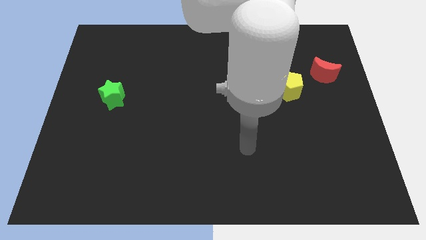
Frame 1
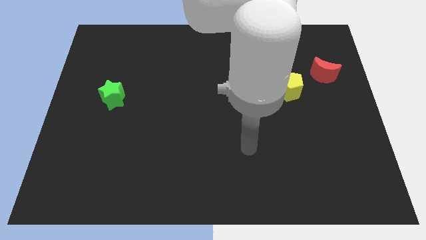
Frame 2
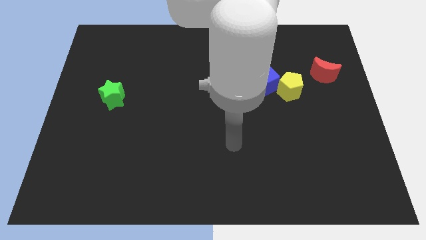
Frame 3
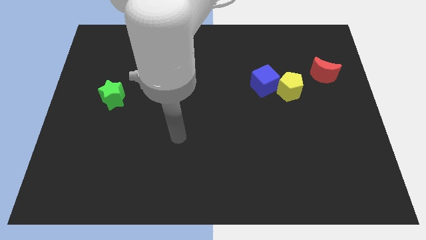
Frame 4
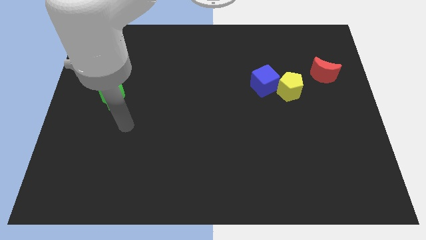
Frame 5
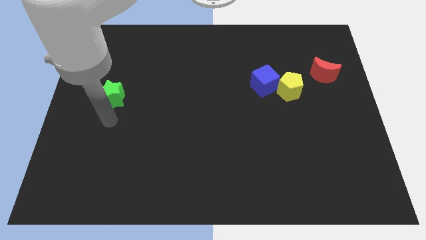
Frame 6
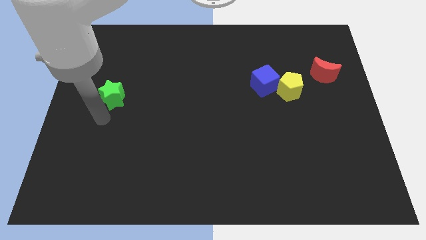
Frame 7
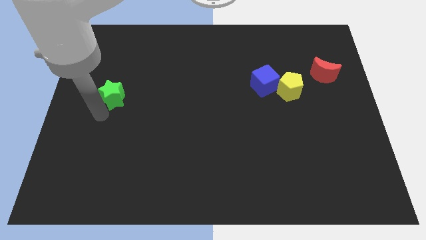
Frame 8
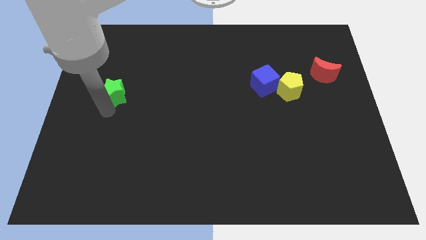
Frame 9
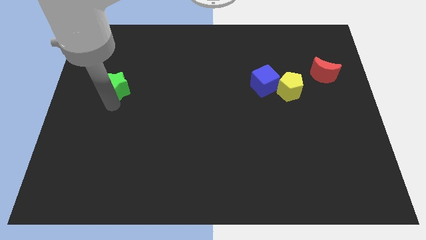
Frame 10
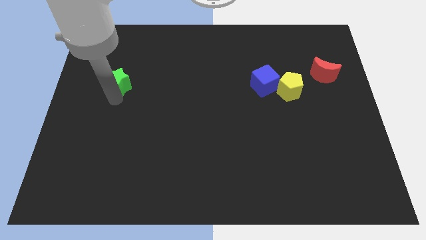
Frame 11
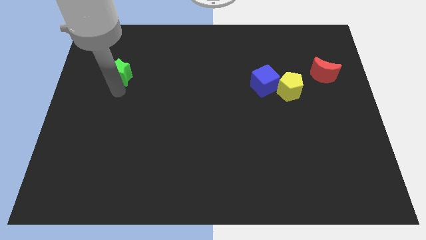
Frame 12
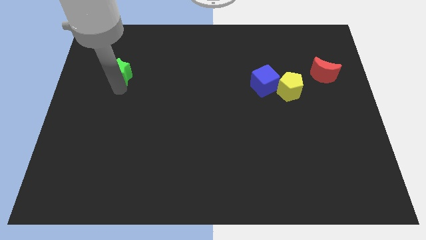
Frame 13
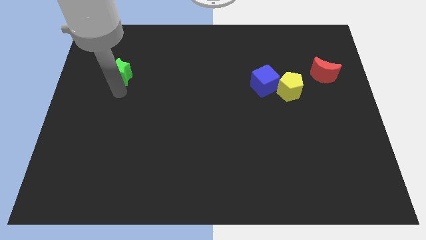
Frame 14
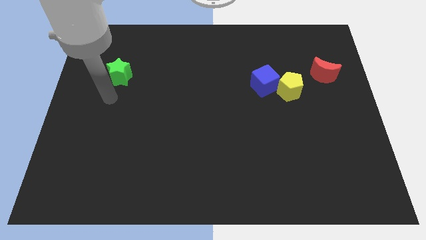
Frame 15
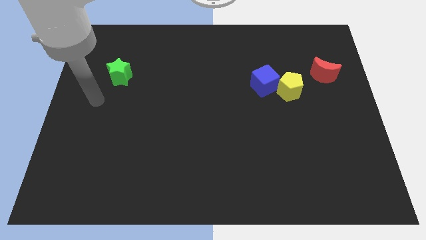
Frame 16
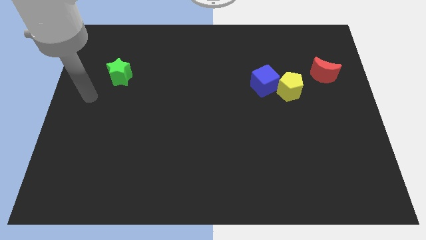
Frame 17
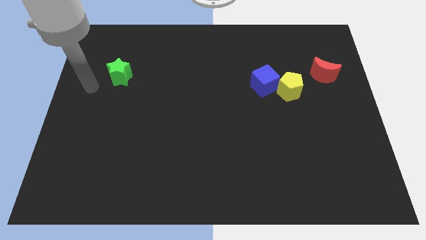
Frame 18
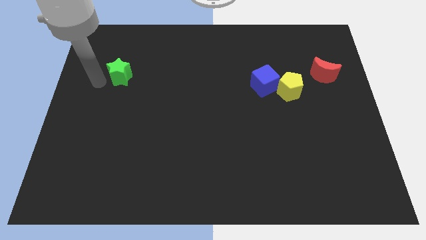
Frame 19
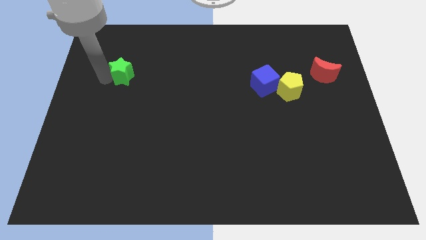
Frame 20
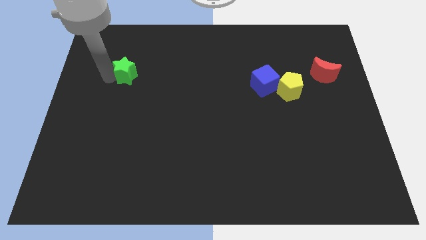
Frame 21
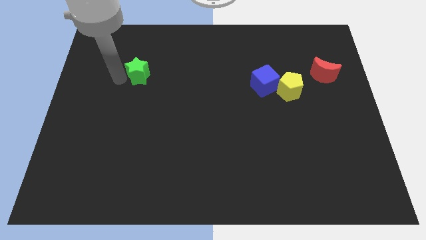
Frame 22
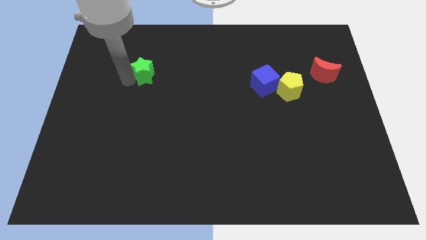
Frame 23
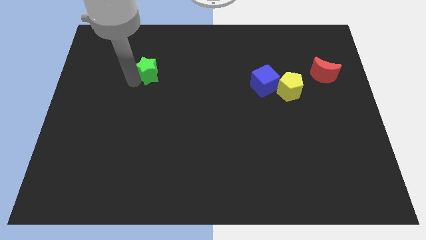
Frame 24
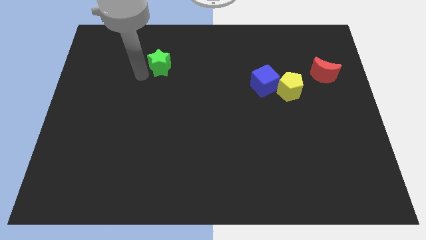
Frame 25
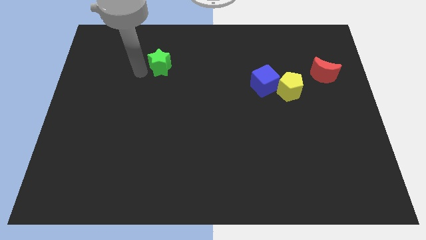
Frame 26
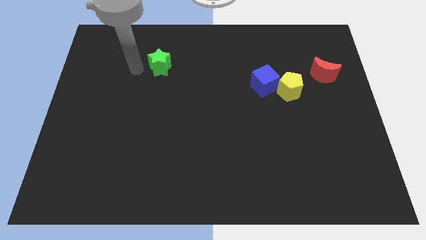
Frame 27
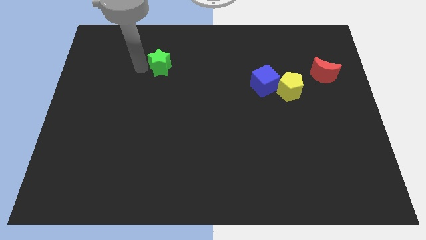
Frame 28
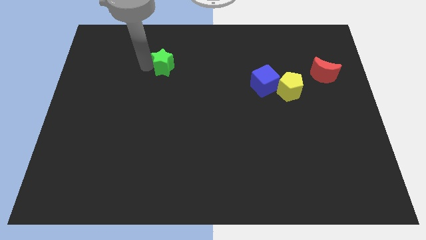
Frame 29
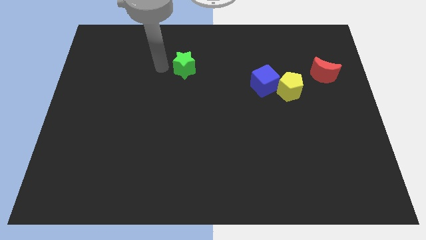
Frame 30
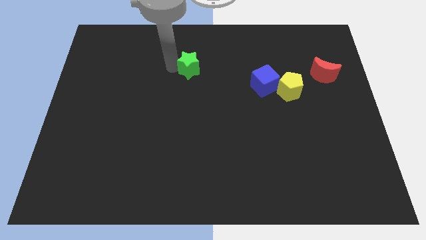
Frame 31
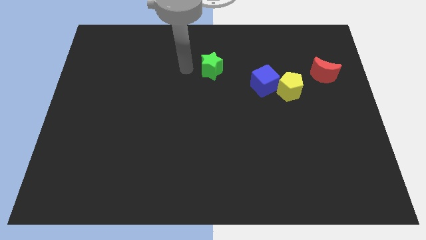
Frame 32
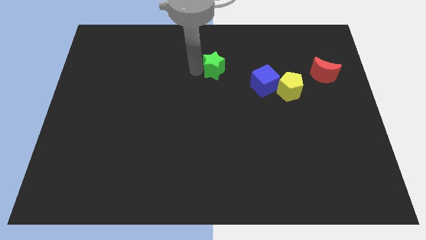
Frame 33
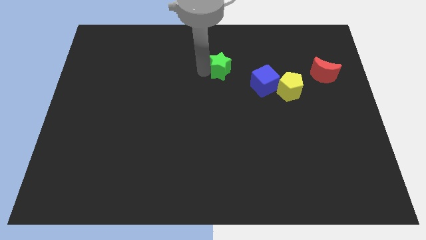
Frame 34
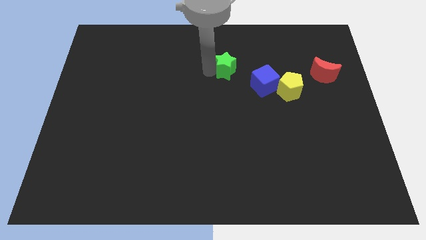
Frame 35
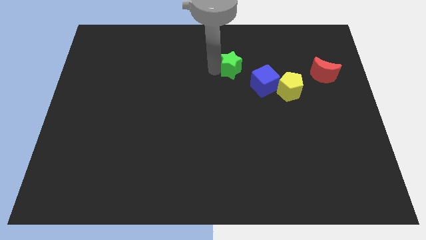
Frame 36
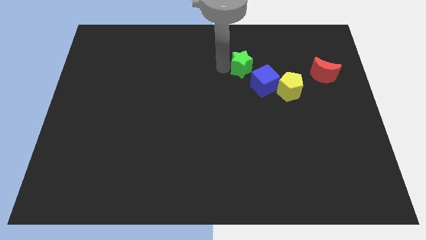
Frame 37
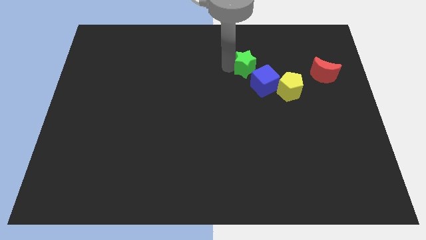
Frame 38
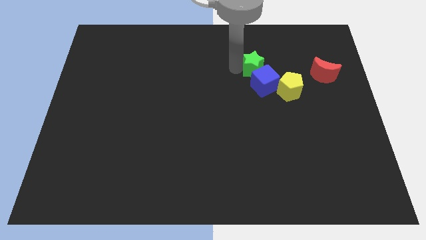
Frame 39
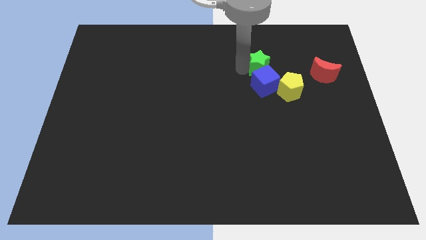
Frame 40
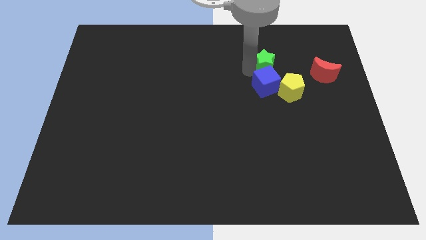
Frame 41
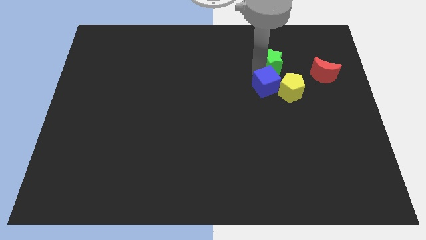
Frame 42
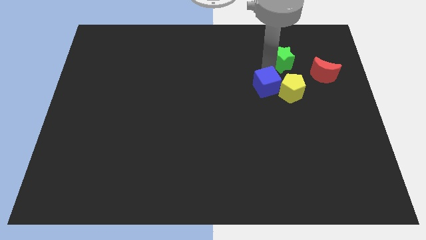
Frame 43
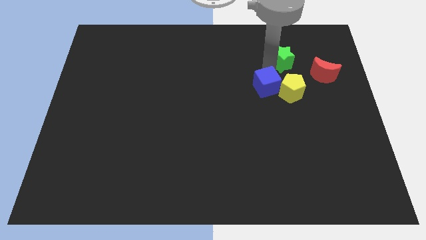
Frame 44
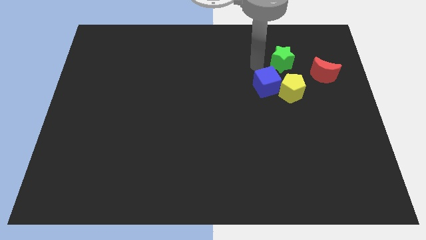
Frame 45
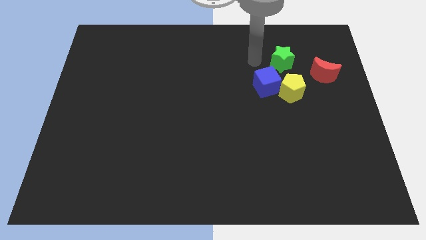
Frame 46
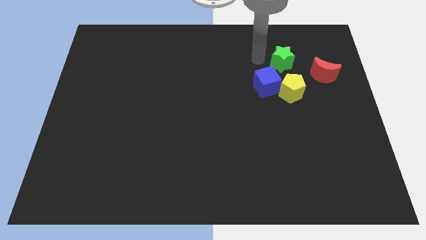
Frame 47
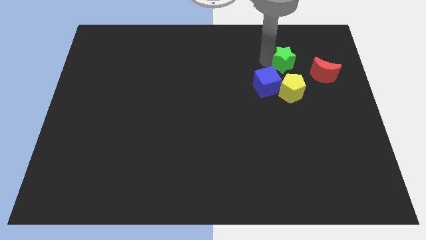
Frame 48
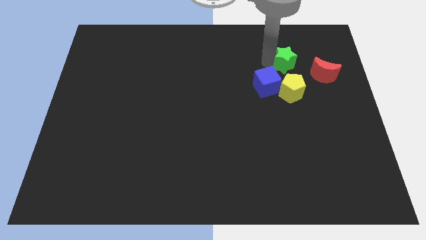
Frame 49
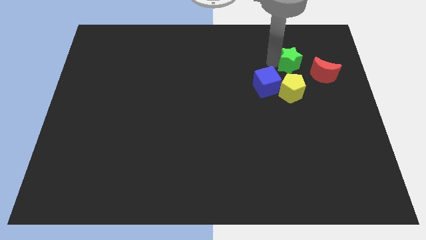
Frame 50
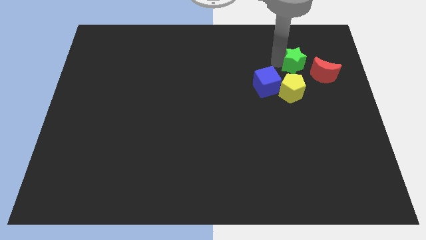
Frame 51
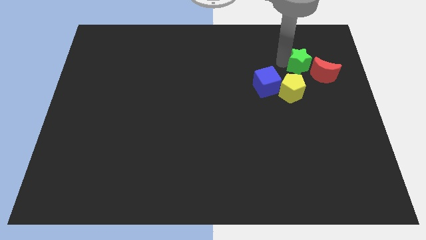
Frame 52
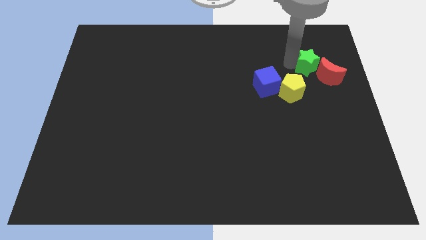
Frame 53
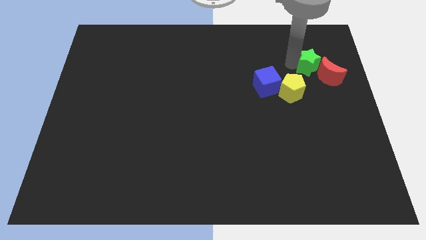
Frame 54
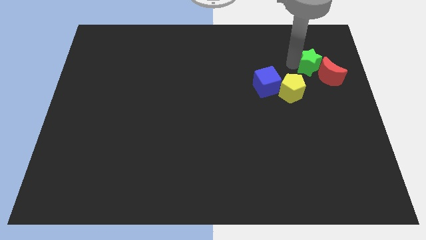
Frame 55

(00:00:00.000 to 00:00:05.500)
move the star close to the moon

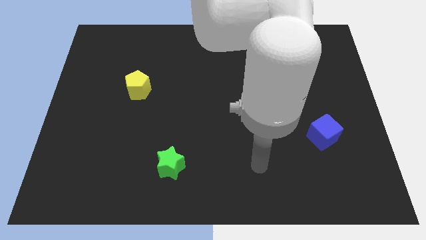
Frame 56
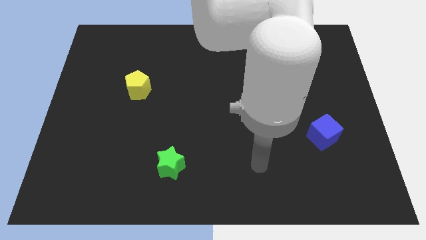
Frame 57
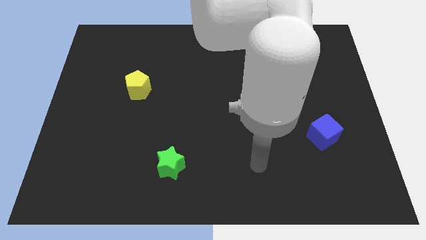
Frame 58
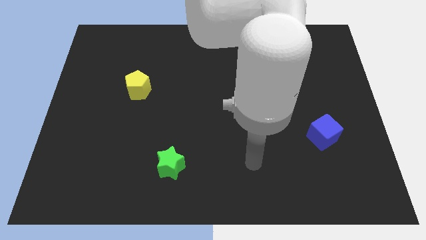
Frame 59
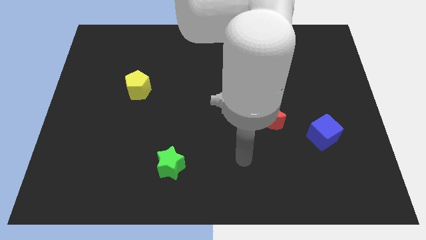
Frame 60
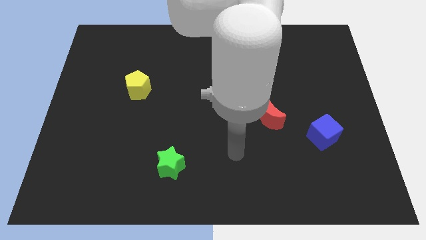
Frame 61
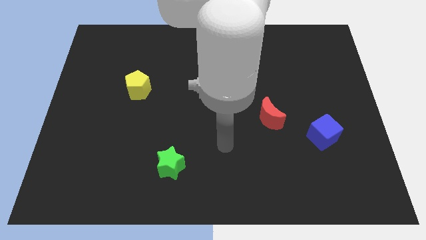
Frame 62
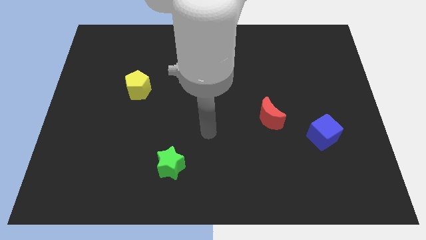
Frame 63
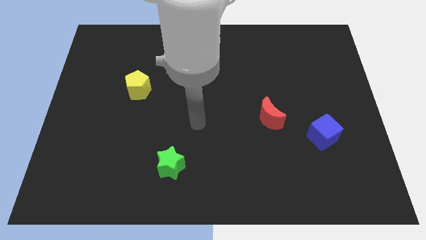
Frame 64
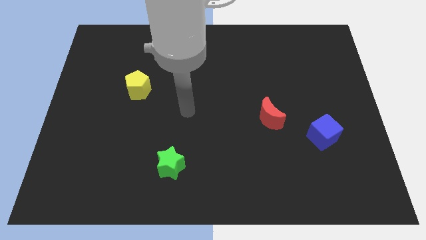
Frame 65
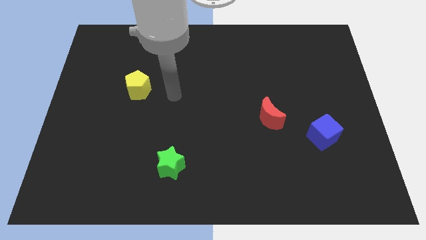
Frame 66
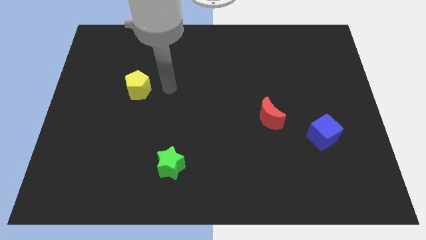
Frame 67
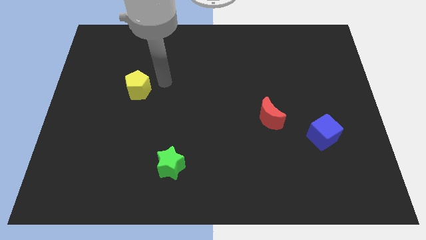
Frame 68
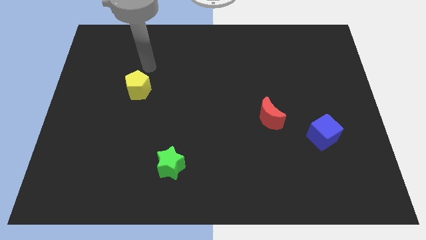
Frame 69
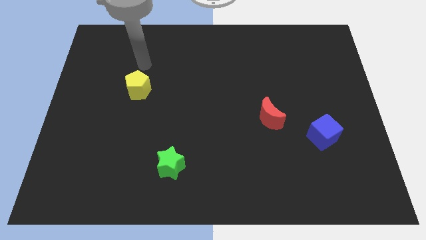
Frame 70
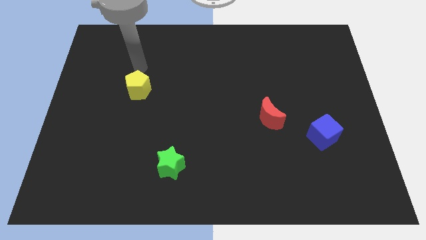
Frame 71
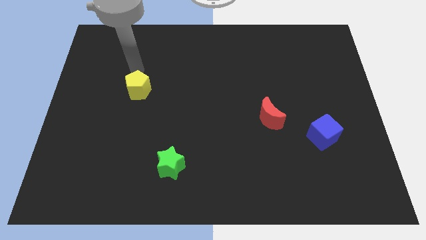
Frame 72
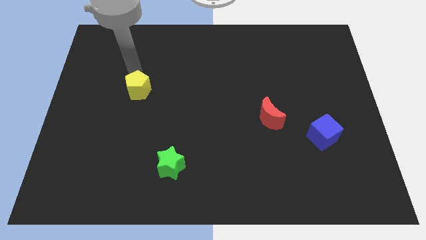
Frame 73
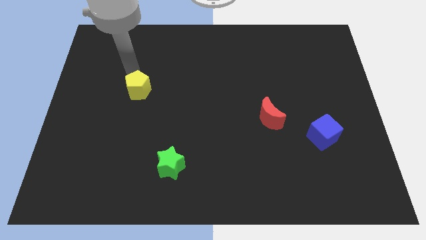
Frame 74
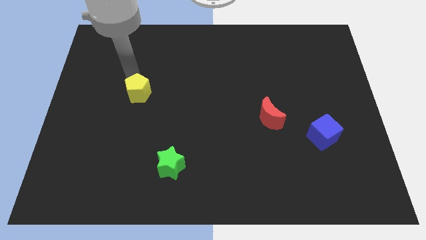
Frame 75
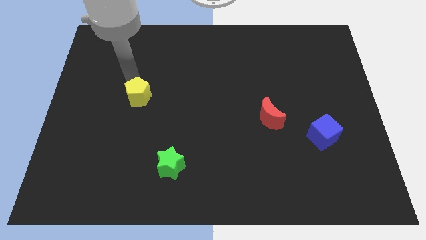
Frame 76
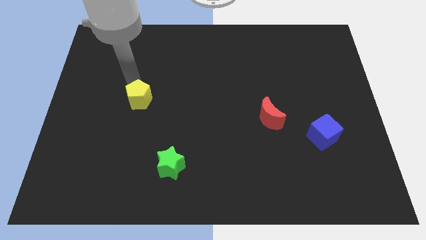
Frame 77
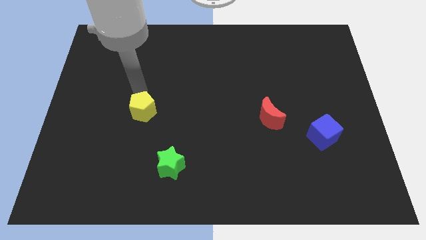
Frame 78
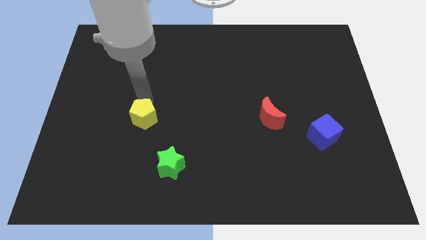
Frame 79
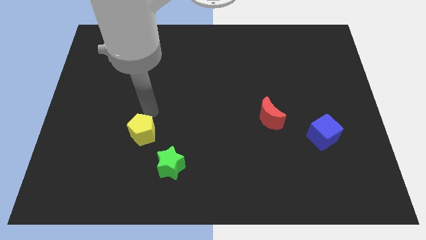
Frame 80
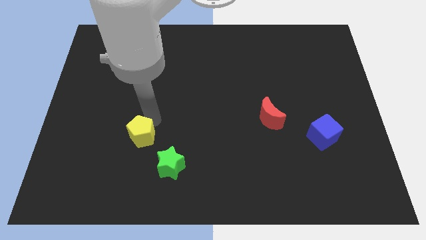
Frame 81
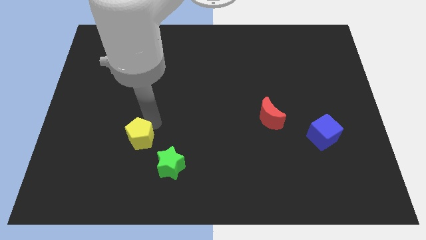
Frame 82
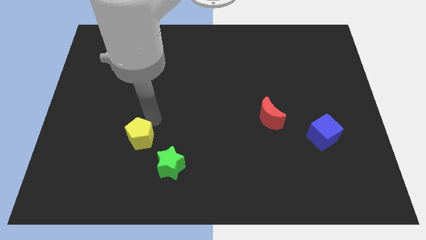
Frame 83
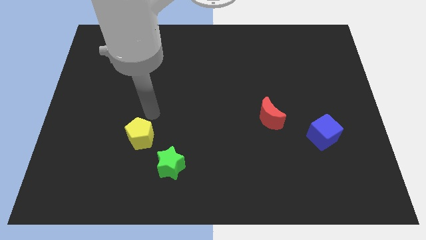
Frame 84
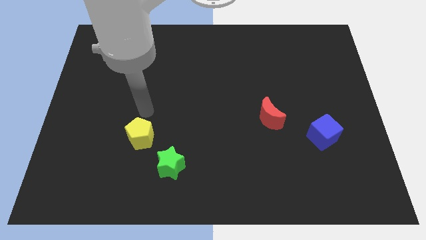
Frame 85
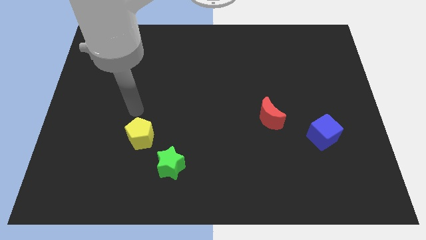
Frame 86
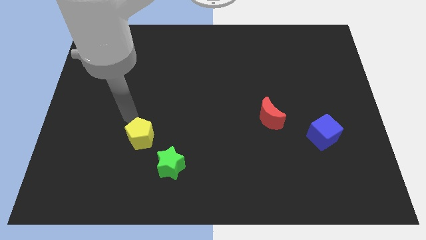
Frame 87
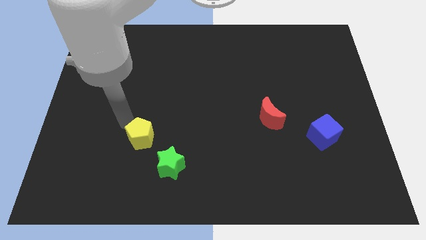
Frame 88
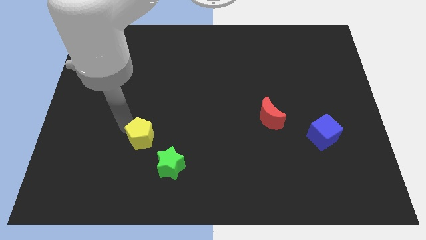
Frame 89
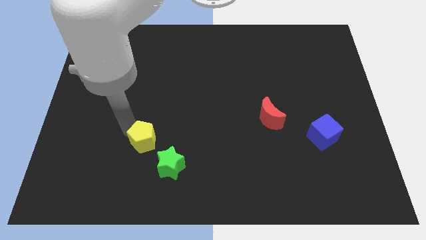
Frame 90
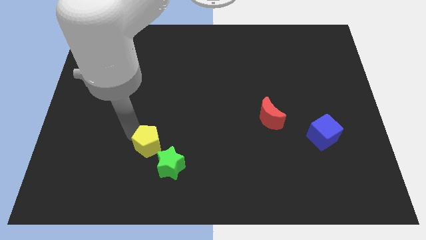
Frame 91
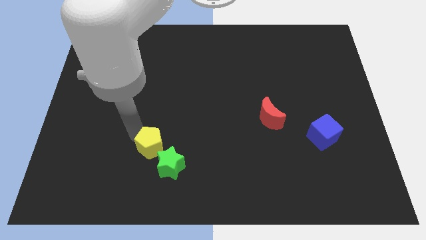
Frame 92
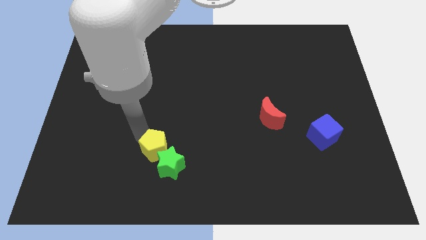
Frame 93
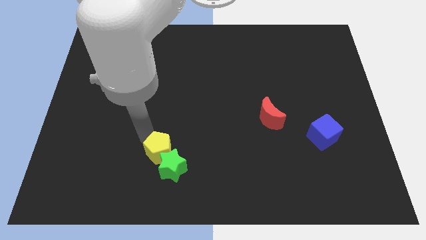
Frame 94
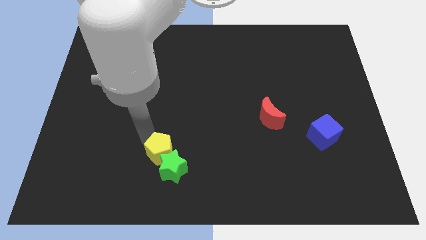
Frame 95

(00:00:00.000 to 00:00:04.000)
put the pentagon towards the green block
